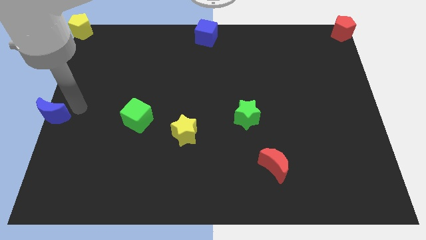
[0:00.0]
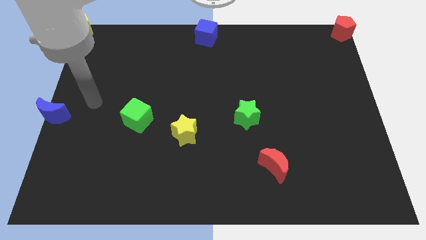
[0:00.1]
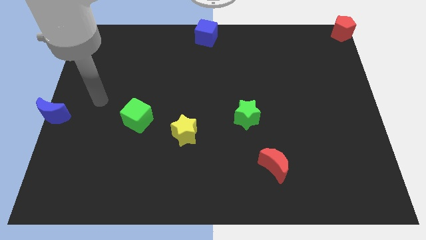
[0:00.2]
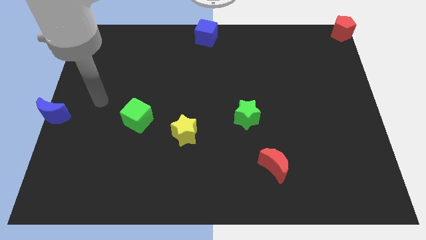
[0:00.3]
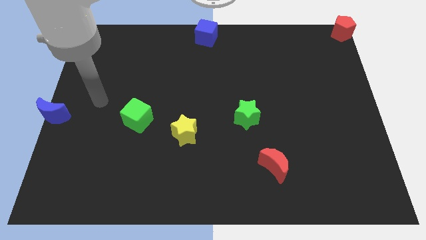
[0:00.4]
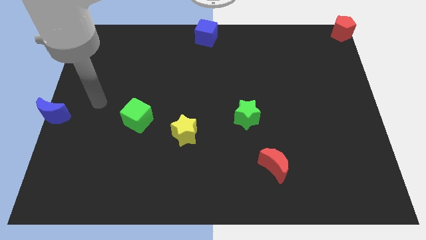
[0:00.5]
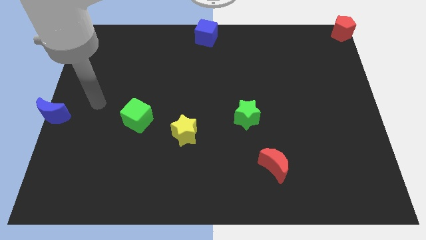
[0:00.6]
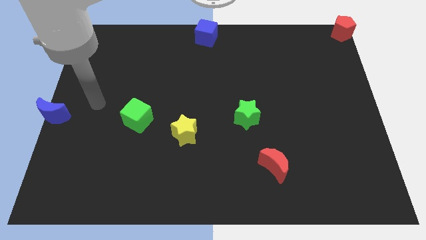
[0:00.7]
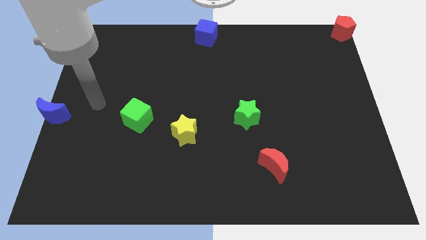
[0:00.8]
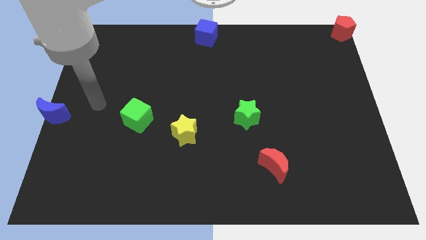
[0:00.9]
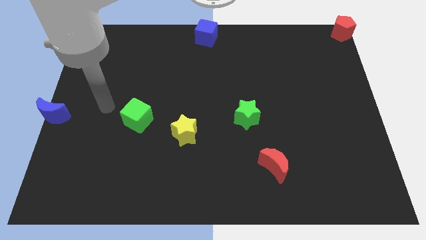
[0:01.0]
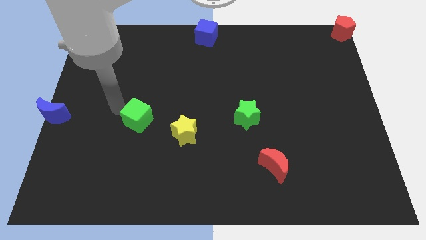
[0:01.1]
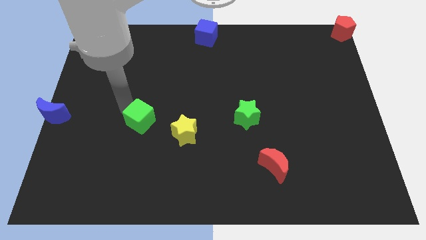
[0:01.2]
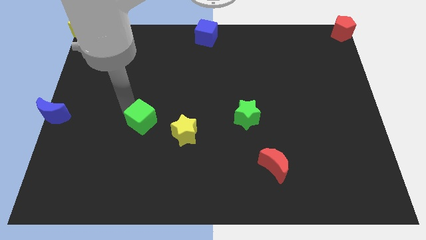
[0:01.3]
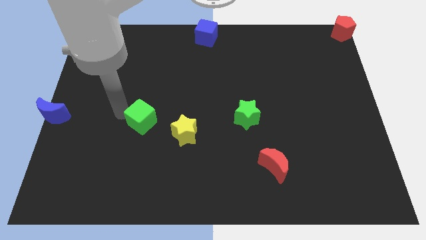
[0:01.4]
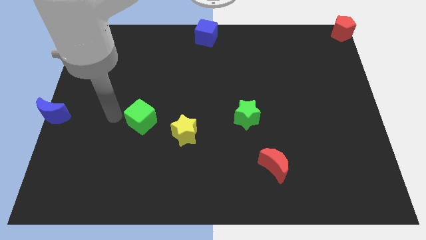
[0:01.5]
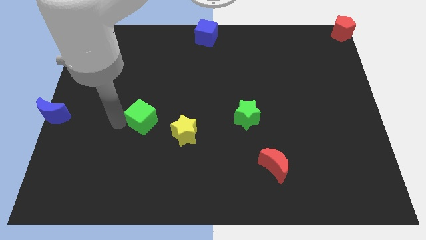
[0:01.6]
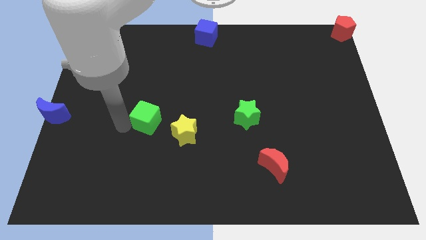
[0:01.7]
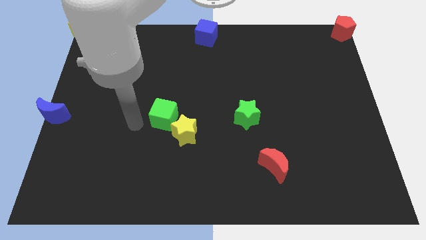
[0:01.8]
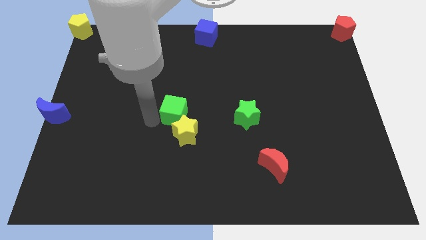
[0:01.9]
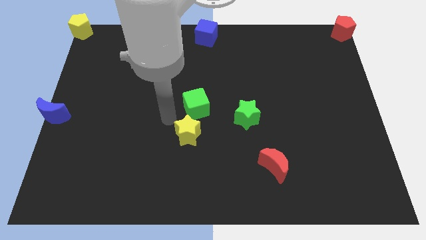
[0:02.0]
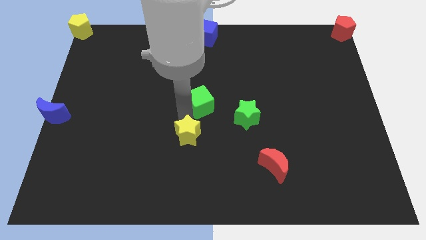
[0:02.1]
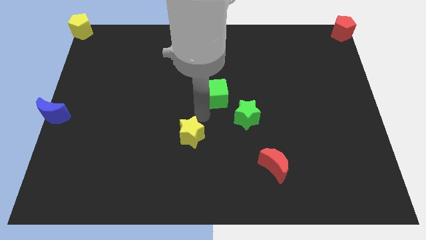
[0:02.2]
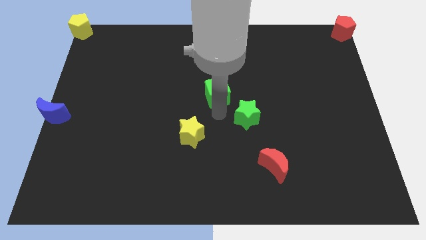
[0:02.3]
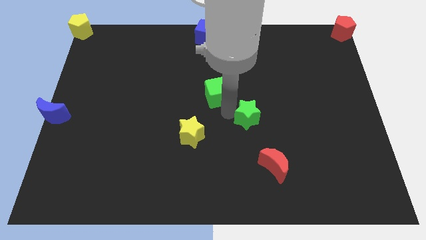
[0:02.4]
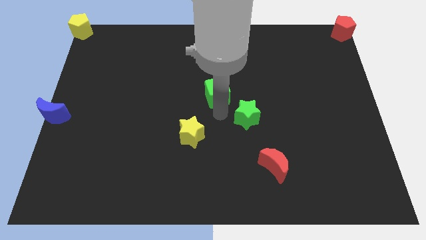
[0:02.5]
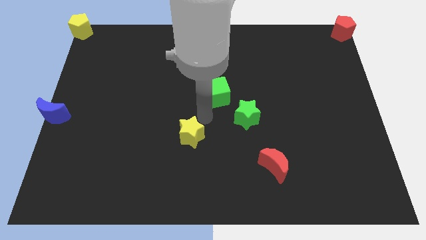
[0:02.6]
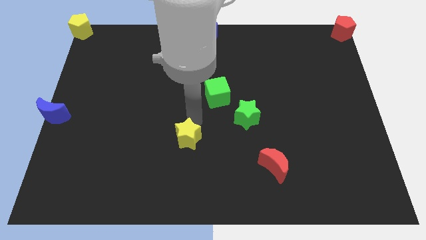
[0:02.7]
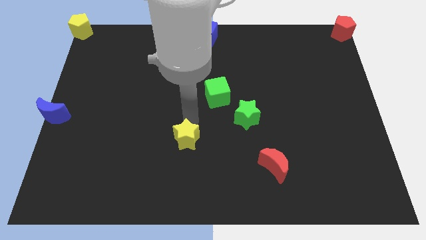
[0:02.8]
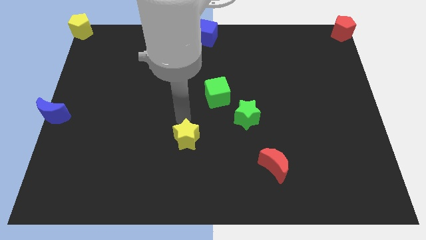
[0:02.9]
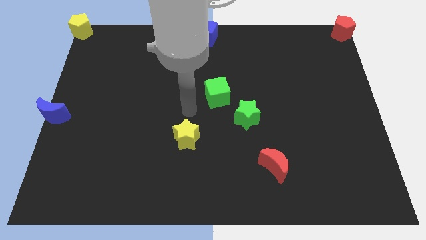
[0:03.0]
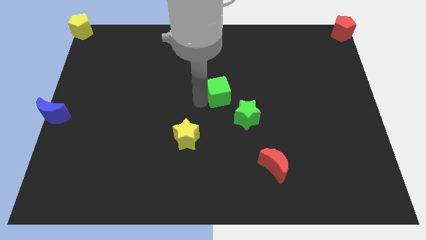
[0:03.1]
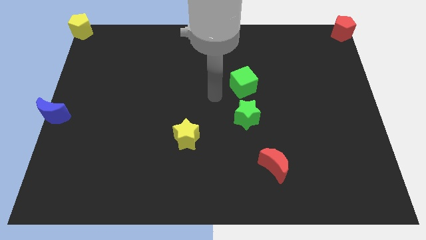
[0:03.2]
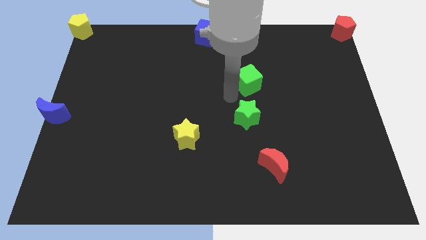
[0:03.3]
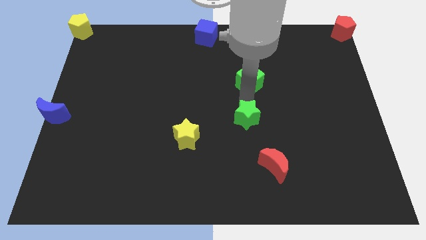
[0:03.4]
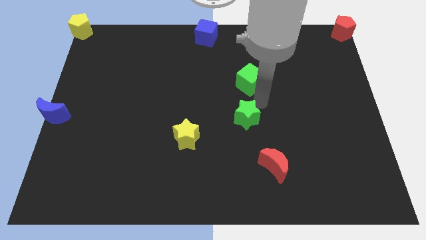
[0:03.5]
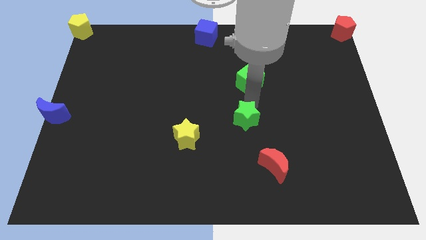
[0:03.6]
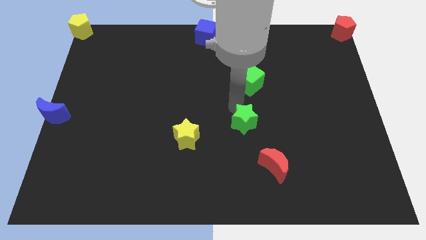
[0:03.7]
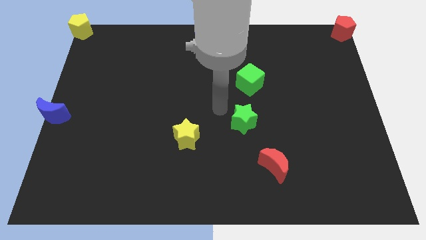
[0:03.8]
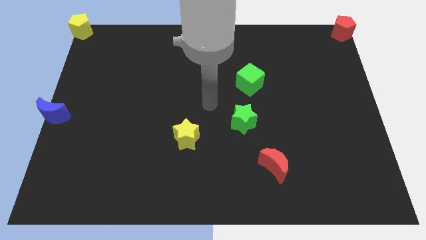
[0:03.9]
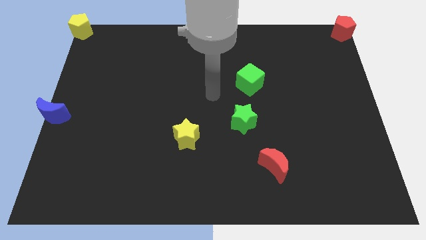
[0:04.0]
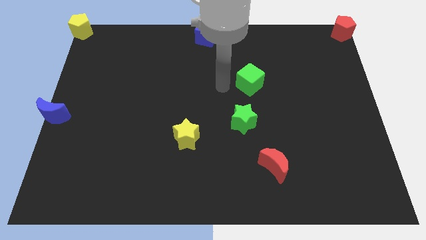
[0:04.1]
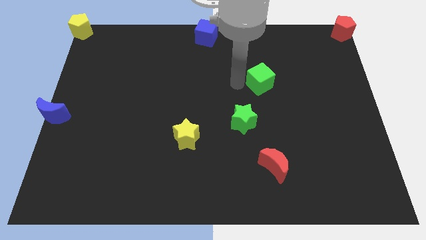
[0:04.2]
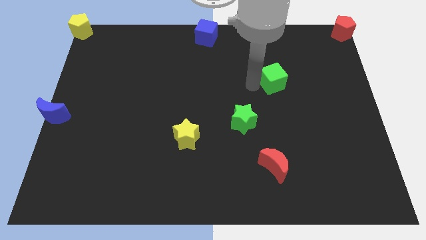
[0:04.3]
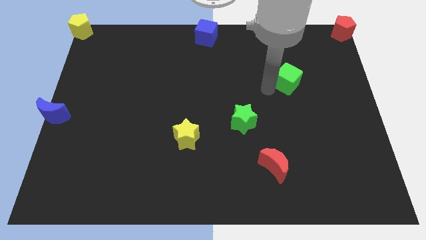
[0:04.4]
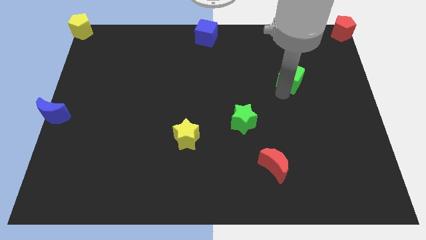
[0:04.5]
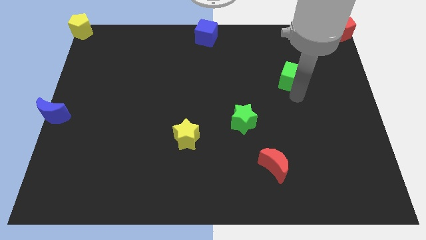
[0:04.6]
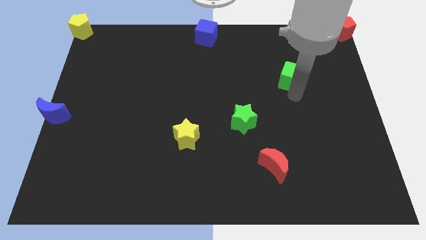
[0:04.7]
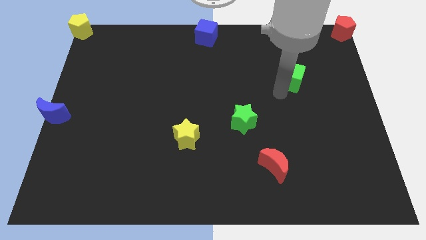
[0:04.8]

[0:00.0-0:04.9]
place the green cube in between the red pentagon and green star

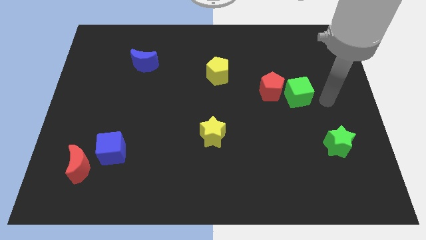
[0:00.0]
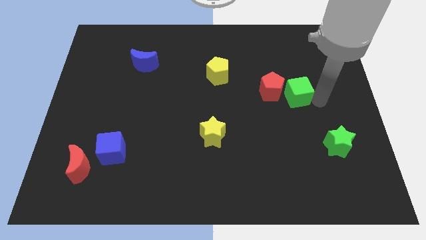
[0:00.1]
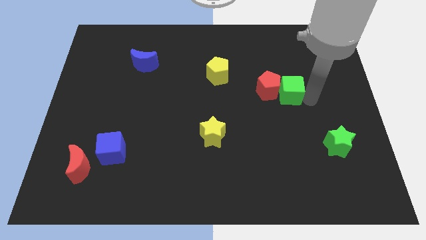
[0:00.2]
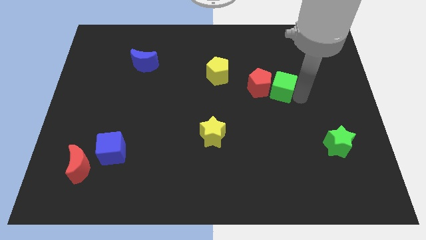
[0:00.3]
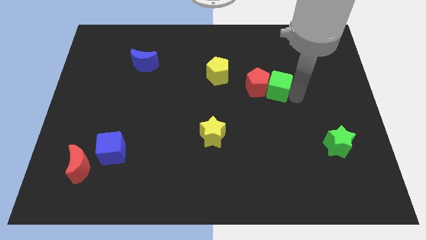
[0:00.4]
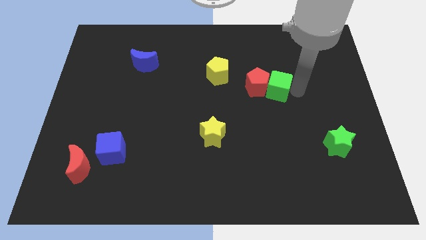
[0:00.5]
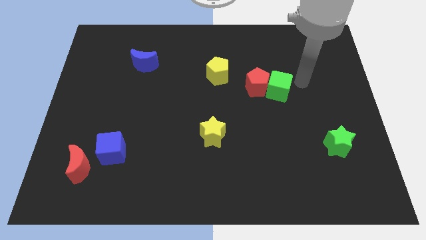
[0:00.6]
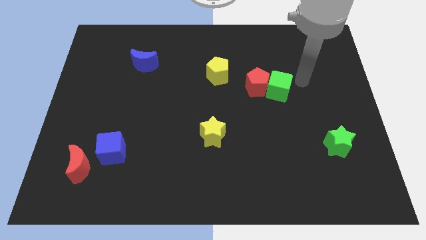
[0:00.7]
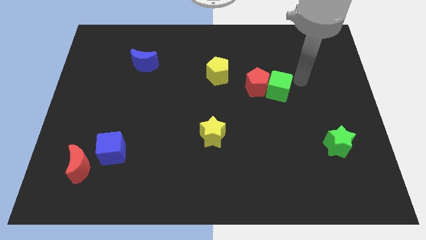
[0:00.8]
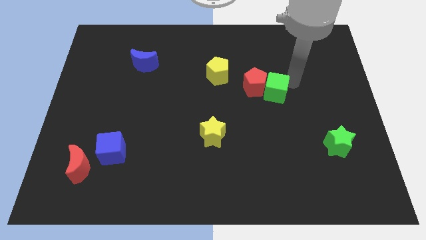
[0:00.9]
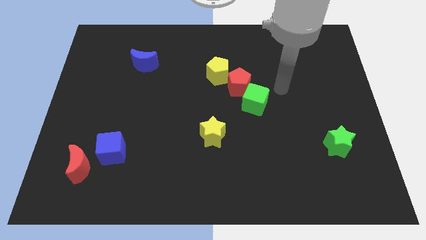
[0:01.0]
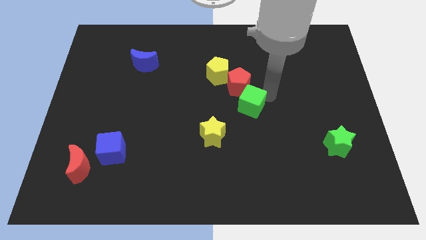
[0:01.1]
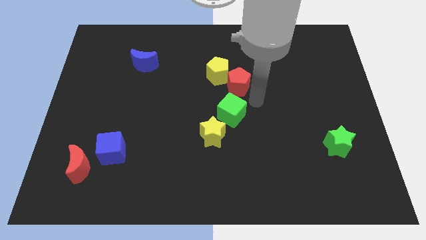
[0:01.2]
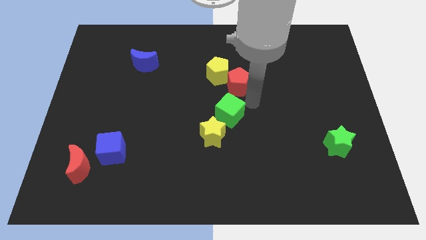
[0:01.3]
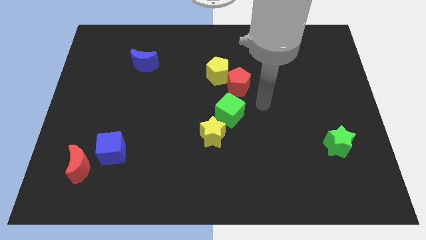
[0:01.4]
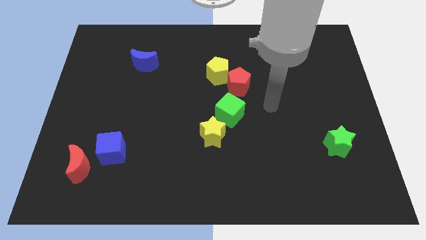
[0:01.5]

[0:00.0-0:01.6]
separate the red pentagon and green cube

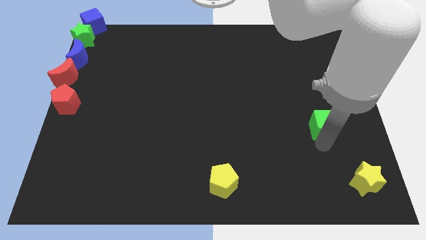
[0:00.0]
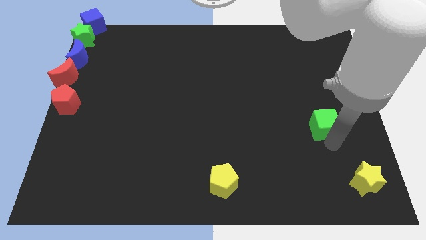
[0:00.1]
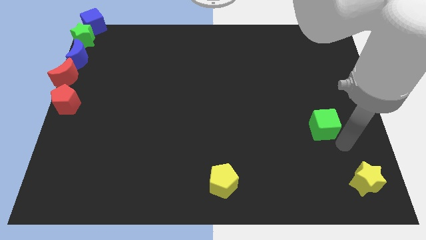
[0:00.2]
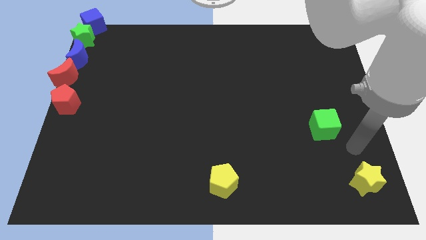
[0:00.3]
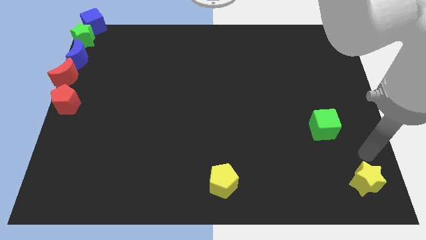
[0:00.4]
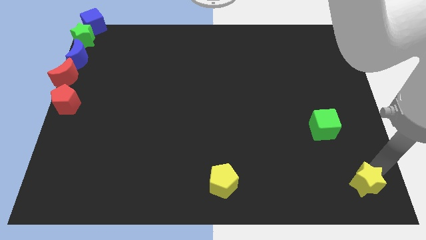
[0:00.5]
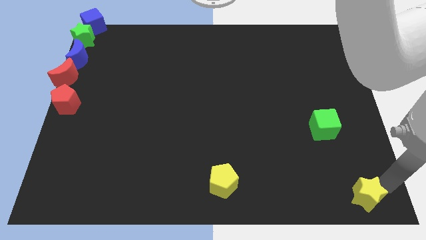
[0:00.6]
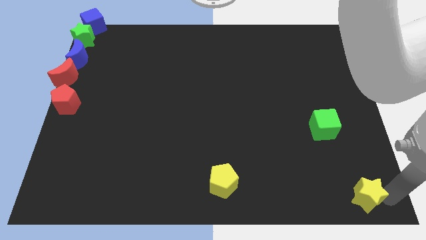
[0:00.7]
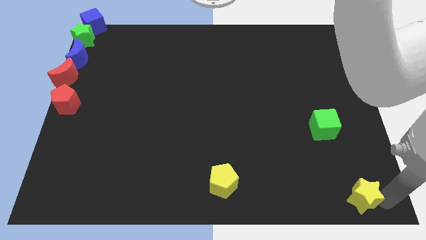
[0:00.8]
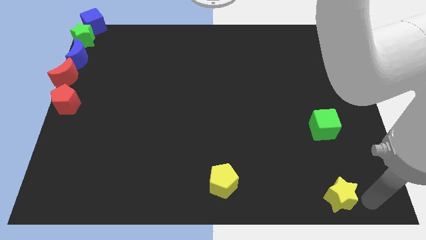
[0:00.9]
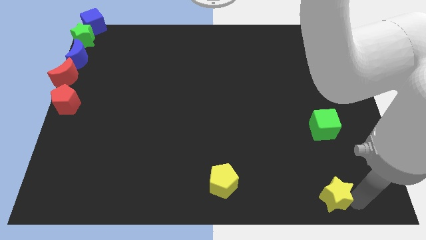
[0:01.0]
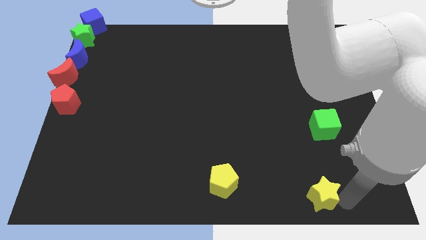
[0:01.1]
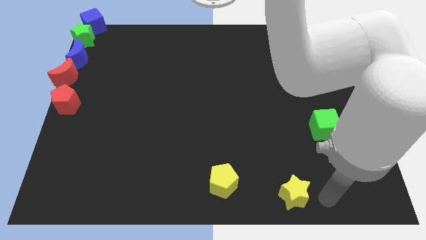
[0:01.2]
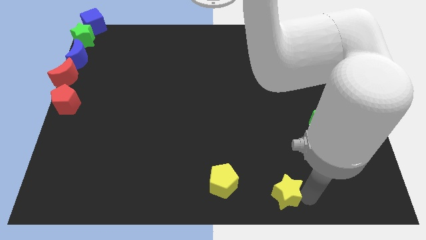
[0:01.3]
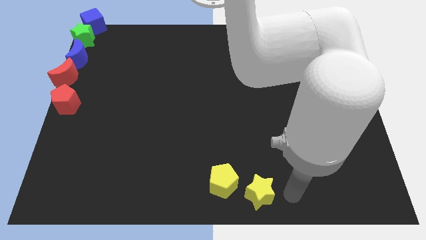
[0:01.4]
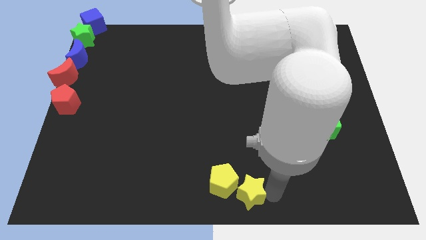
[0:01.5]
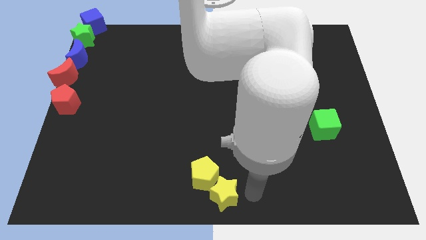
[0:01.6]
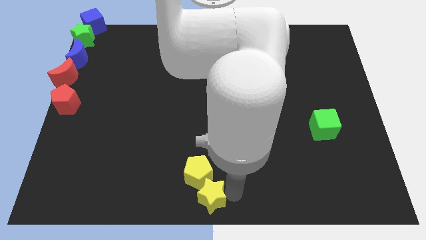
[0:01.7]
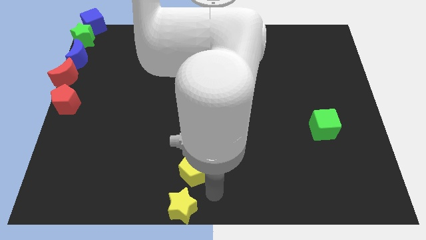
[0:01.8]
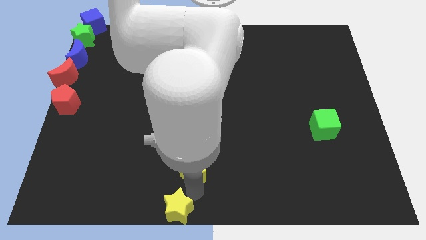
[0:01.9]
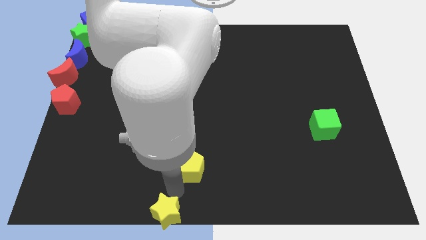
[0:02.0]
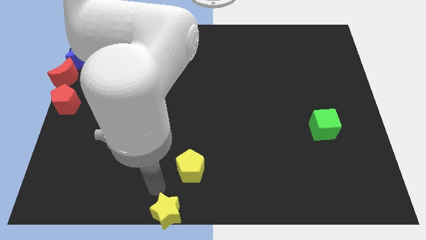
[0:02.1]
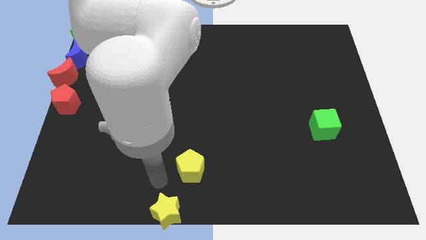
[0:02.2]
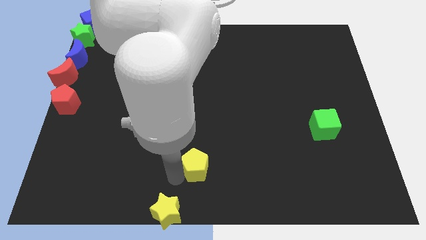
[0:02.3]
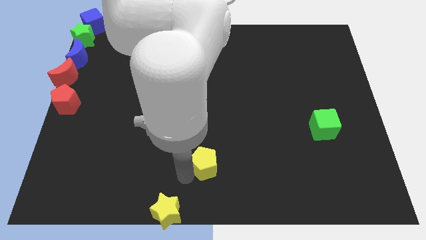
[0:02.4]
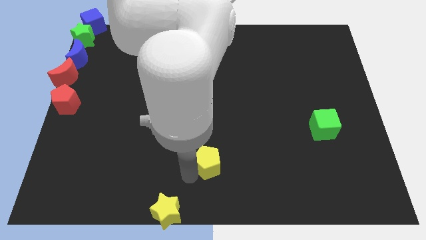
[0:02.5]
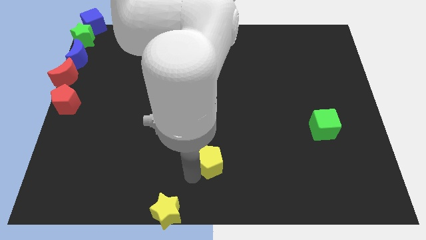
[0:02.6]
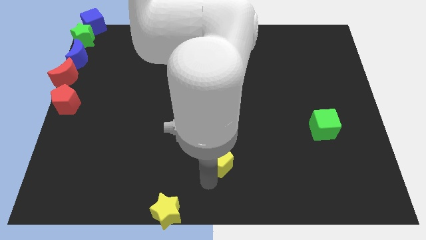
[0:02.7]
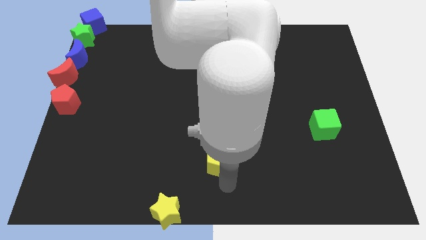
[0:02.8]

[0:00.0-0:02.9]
move the yellow star towards left bottom corner of the board
